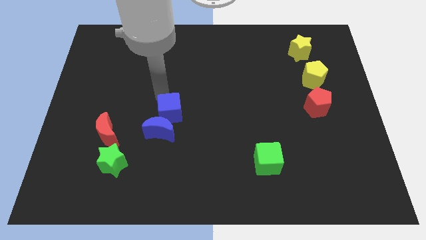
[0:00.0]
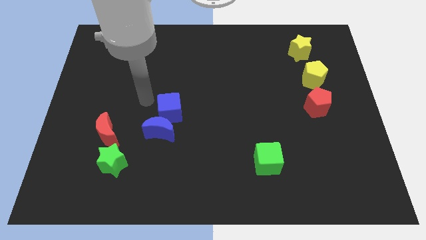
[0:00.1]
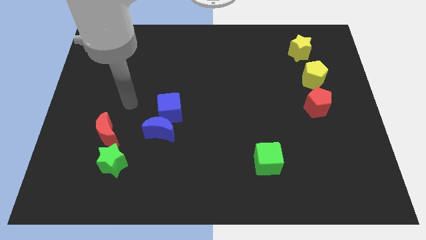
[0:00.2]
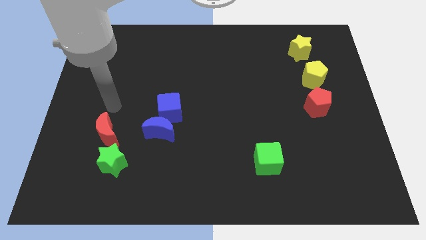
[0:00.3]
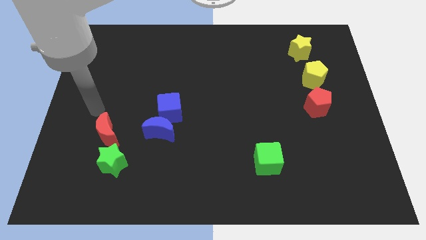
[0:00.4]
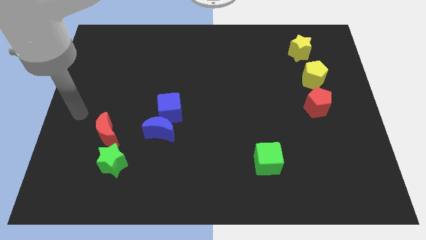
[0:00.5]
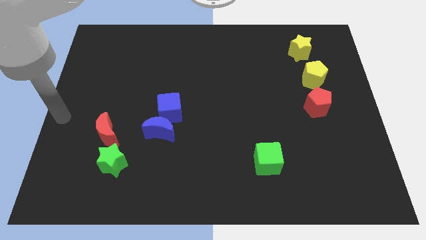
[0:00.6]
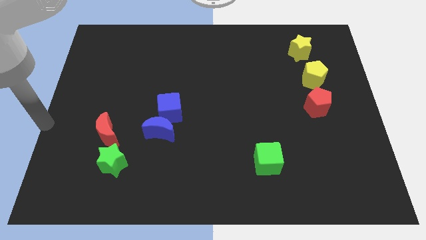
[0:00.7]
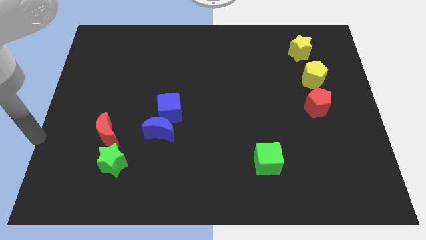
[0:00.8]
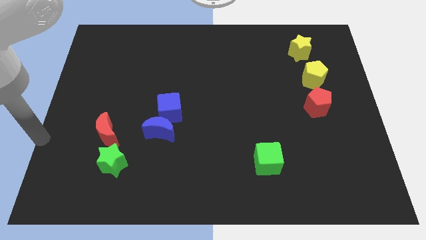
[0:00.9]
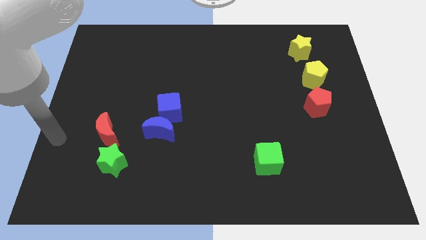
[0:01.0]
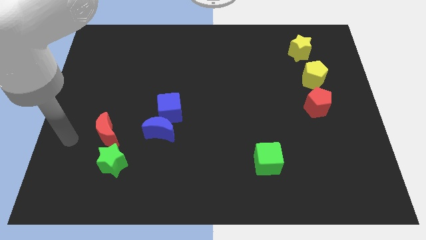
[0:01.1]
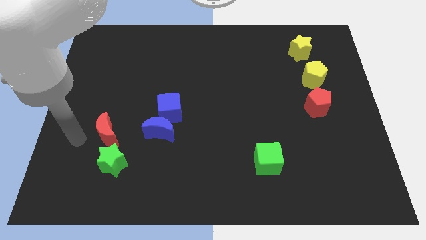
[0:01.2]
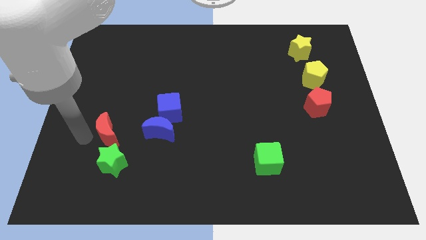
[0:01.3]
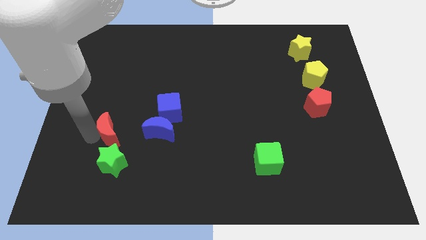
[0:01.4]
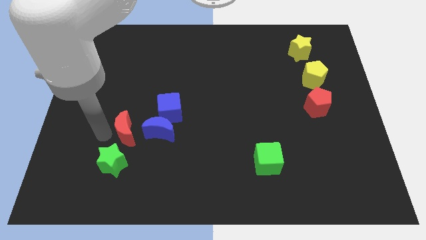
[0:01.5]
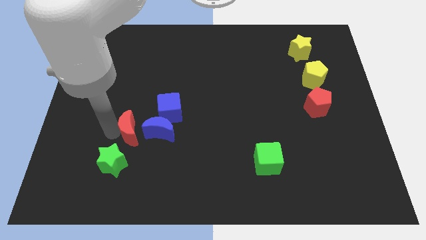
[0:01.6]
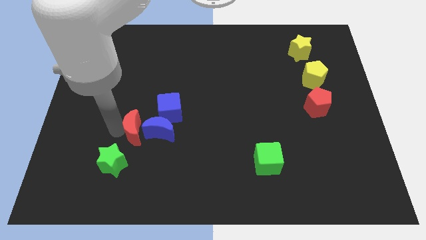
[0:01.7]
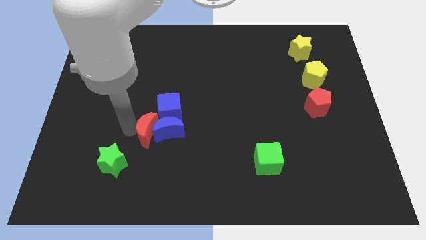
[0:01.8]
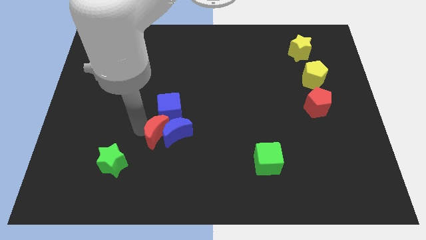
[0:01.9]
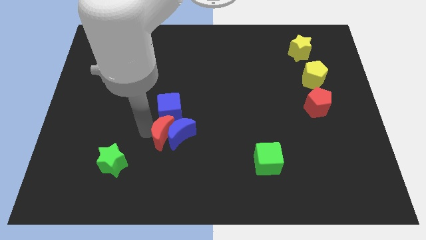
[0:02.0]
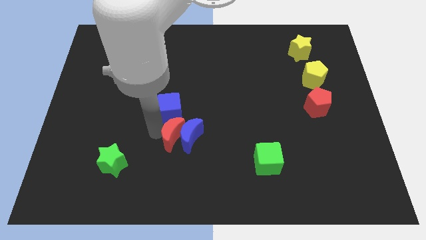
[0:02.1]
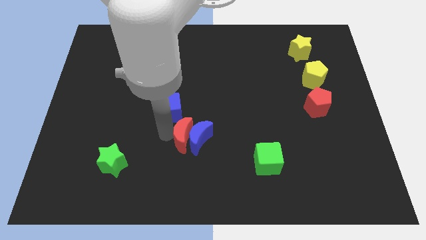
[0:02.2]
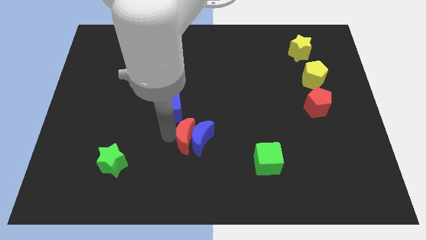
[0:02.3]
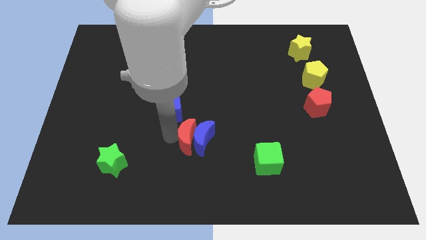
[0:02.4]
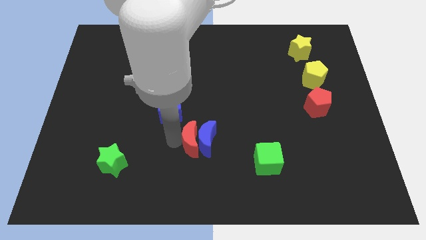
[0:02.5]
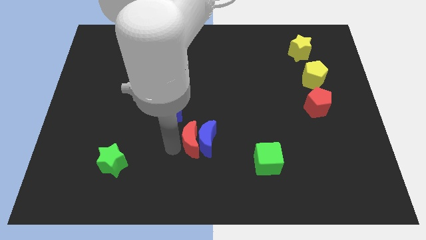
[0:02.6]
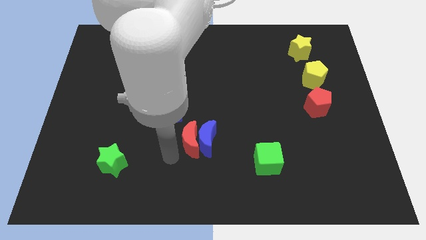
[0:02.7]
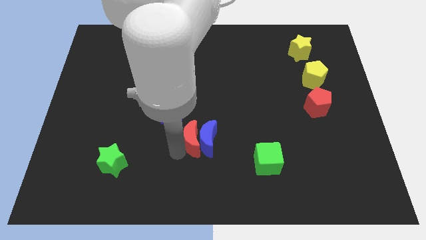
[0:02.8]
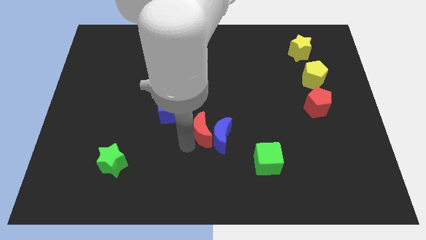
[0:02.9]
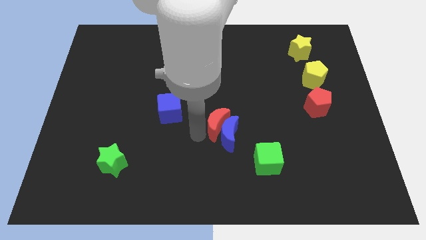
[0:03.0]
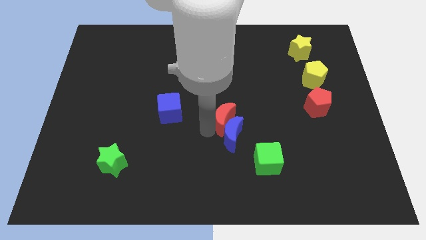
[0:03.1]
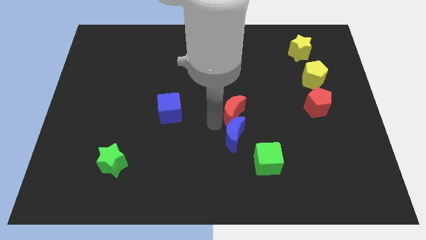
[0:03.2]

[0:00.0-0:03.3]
push blue moon with the red moon

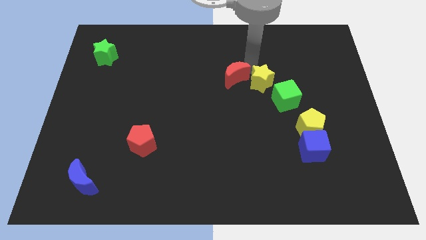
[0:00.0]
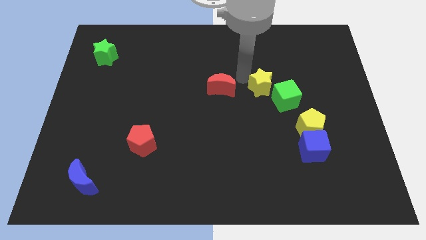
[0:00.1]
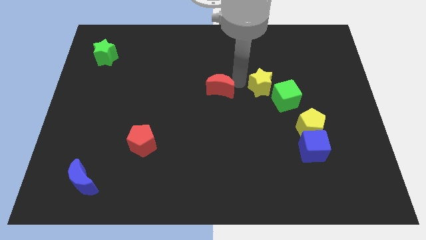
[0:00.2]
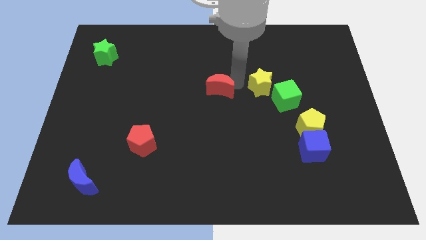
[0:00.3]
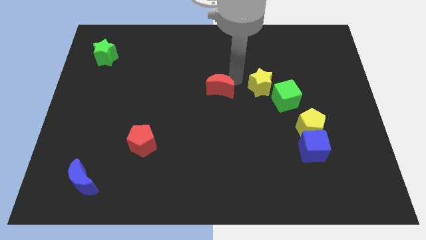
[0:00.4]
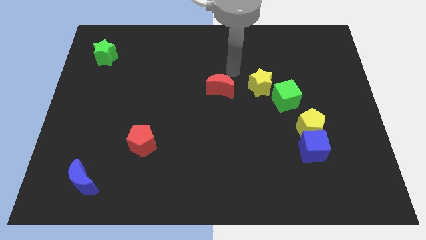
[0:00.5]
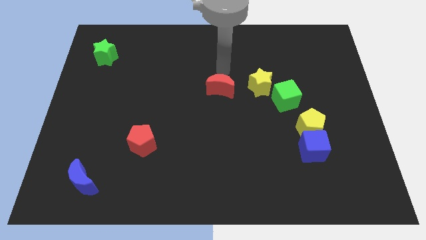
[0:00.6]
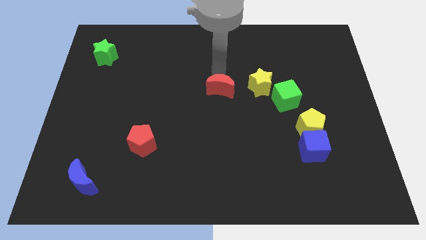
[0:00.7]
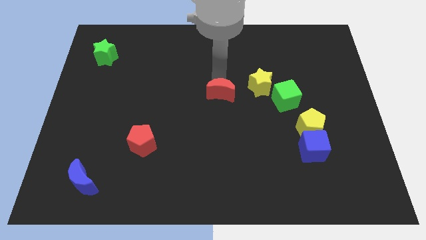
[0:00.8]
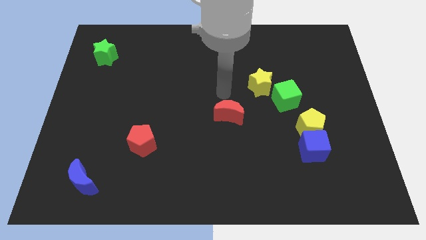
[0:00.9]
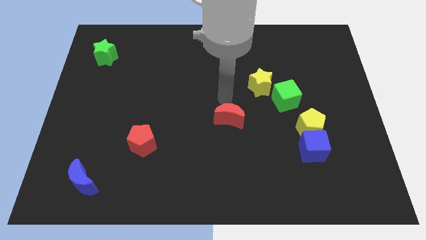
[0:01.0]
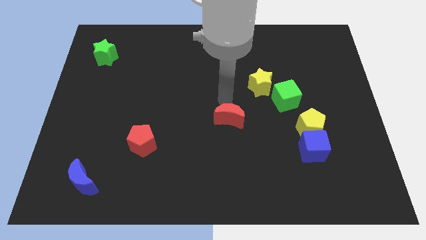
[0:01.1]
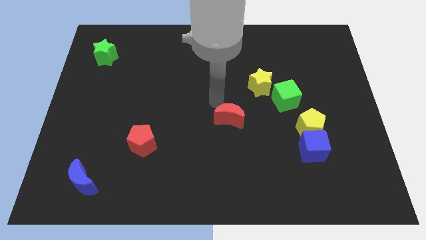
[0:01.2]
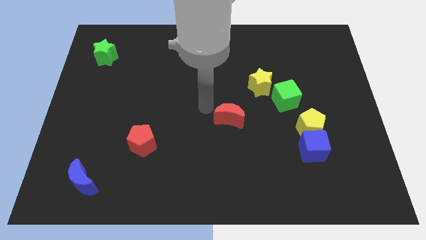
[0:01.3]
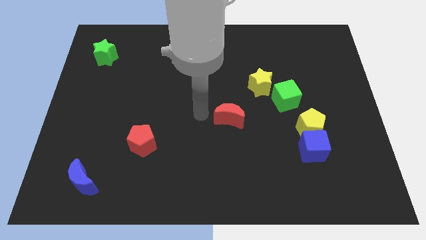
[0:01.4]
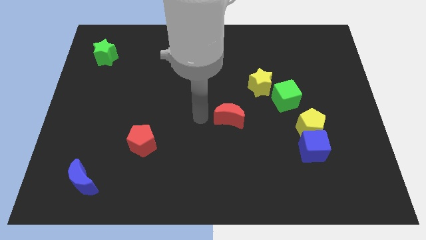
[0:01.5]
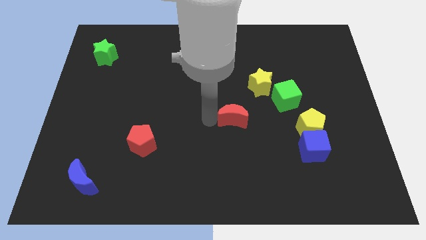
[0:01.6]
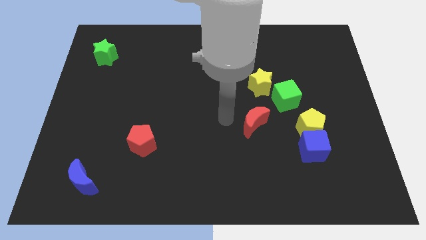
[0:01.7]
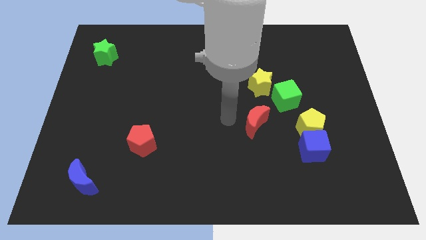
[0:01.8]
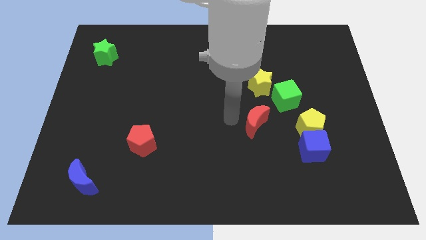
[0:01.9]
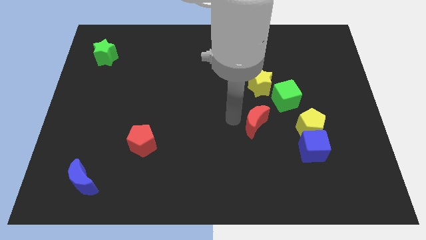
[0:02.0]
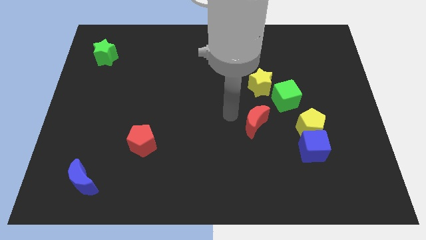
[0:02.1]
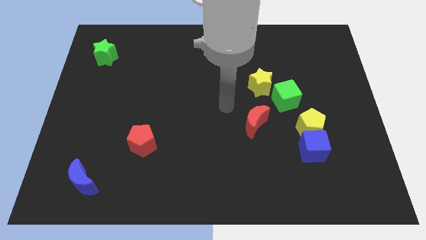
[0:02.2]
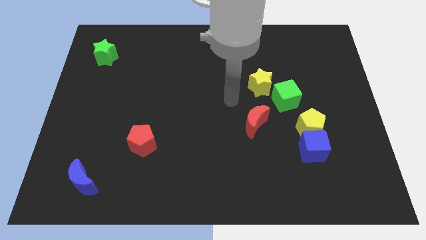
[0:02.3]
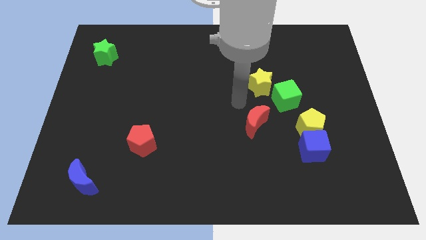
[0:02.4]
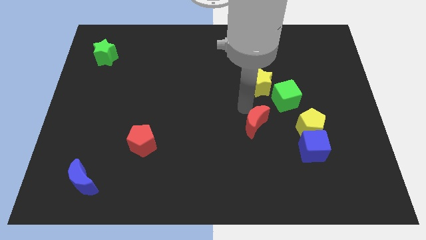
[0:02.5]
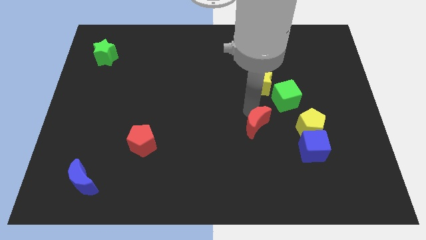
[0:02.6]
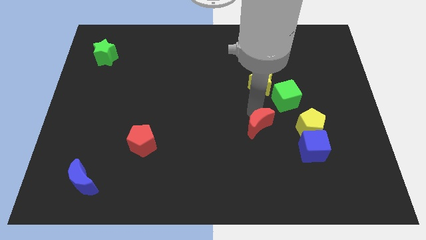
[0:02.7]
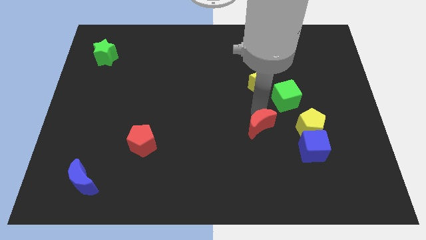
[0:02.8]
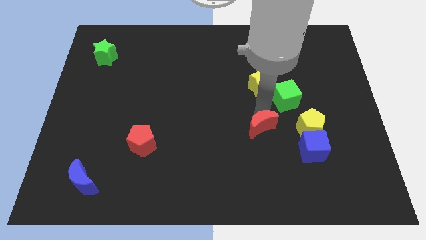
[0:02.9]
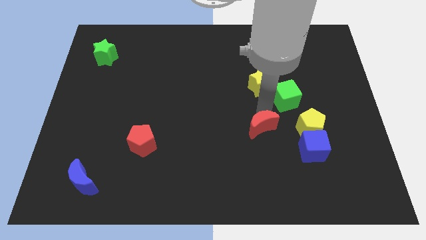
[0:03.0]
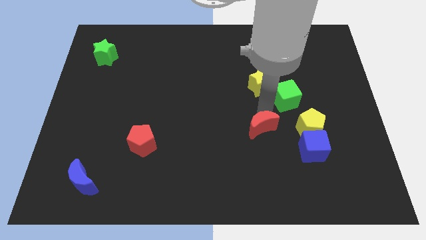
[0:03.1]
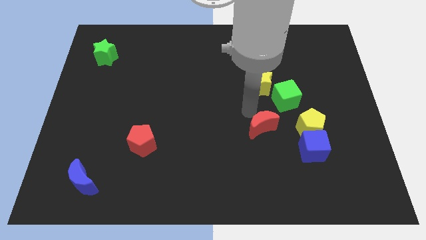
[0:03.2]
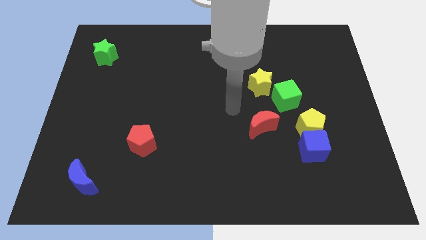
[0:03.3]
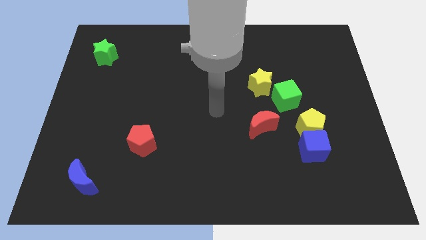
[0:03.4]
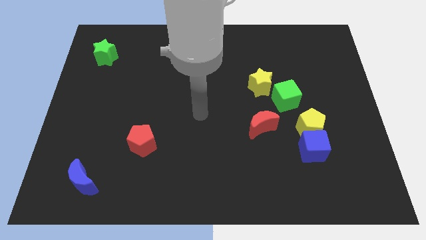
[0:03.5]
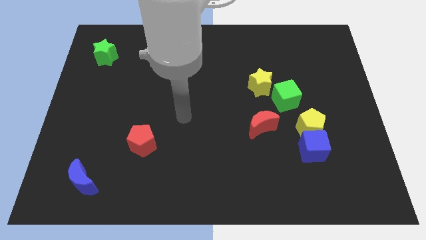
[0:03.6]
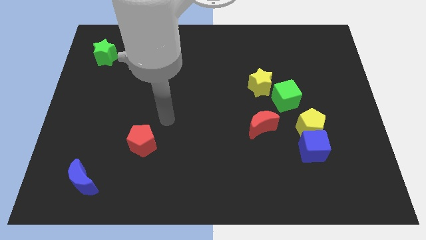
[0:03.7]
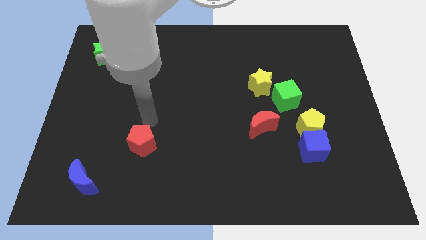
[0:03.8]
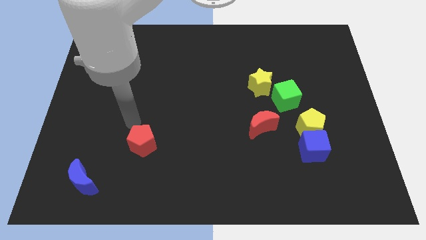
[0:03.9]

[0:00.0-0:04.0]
move the red moon parallel to the yellow pentagon

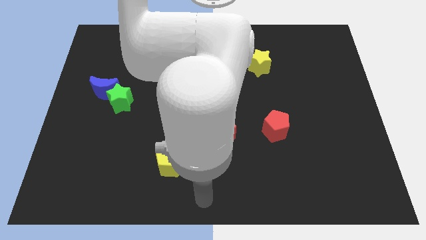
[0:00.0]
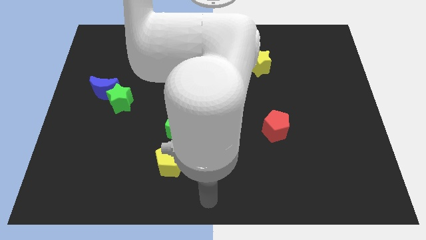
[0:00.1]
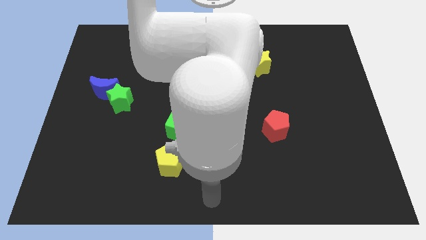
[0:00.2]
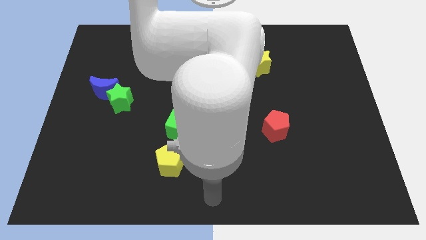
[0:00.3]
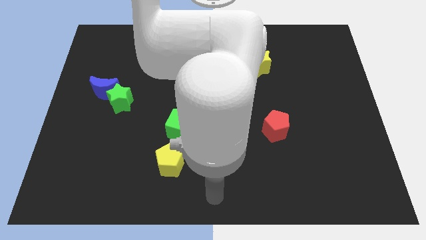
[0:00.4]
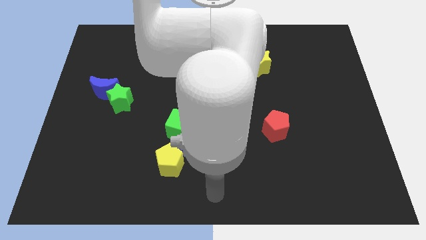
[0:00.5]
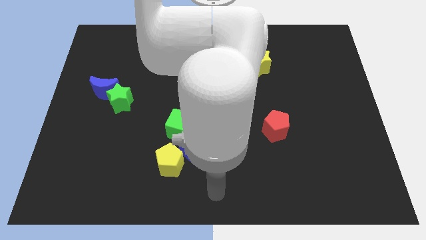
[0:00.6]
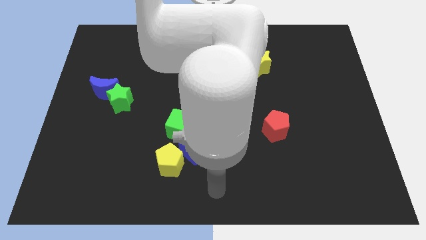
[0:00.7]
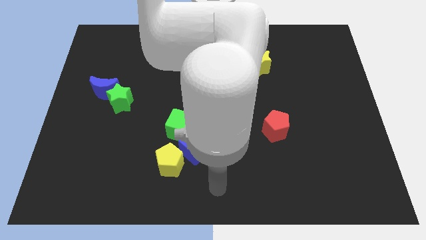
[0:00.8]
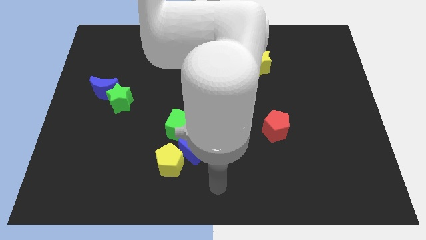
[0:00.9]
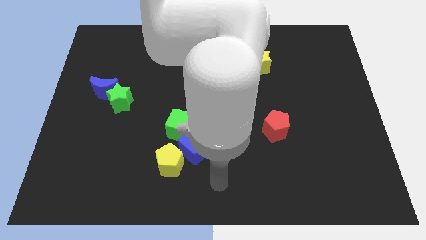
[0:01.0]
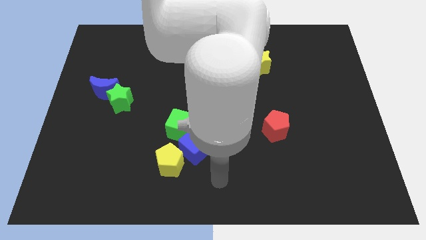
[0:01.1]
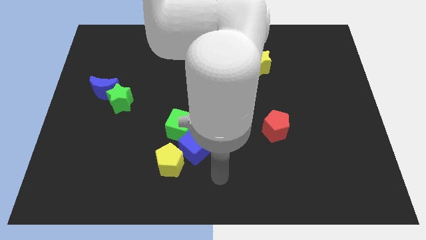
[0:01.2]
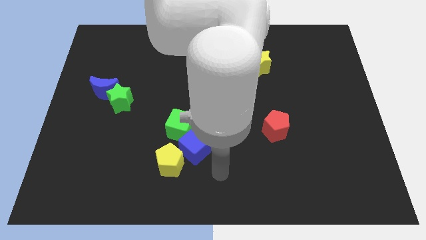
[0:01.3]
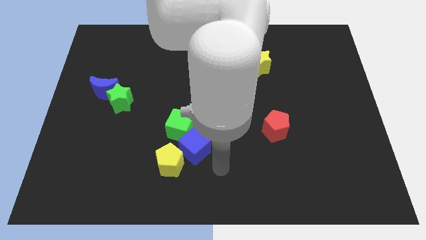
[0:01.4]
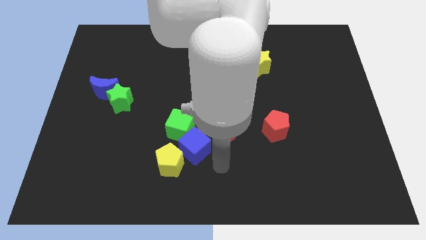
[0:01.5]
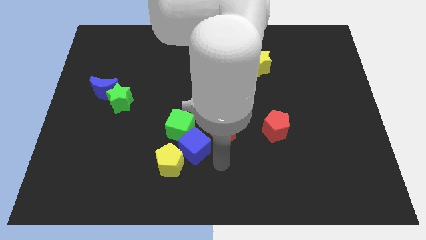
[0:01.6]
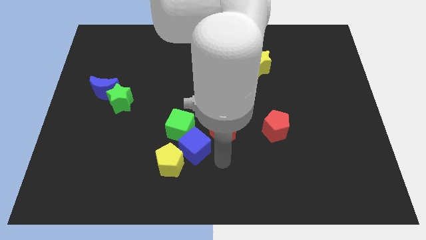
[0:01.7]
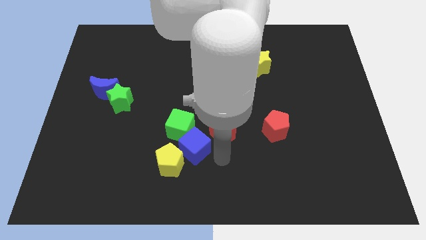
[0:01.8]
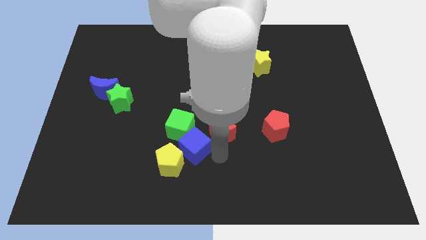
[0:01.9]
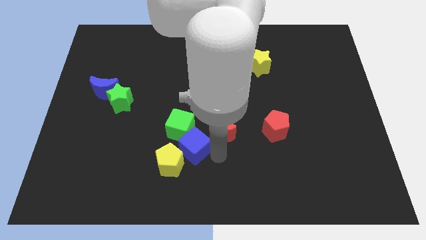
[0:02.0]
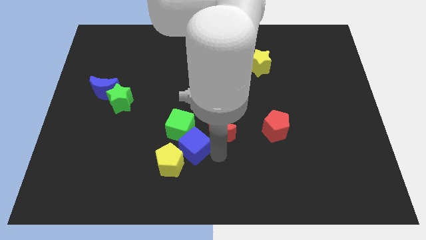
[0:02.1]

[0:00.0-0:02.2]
point your arm at the right of the blue cube
